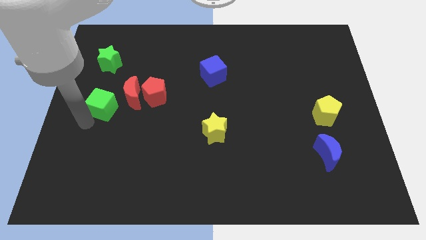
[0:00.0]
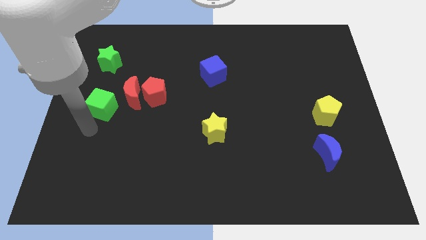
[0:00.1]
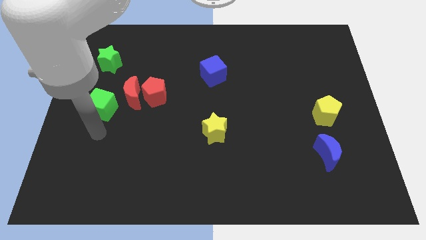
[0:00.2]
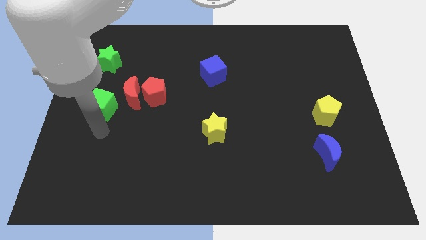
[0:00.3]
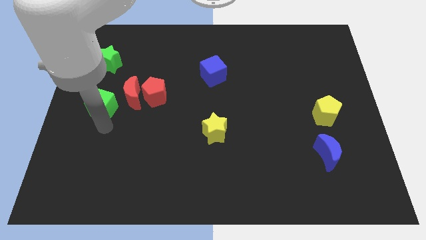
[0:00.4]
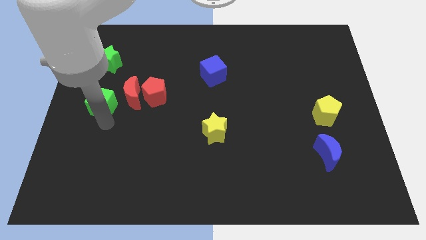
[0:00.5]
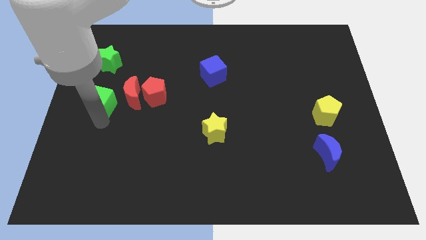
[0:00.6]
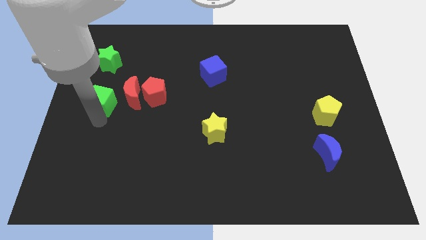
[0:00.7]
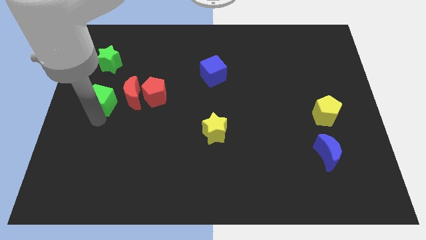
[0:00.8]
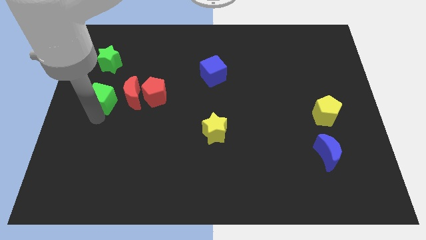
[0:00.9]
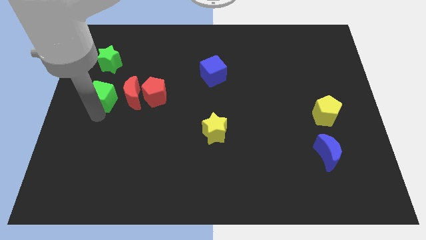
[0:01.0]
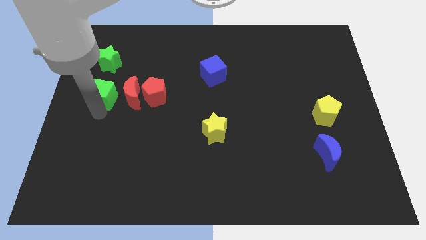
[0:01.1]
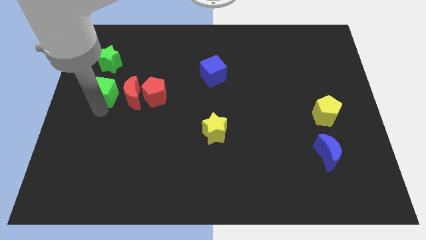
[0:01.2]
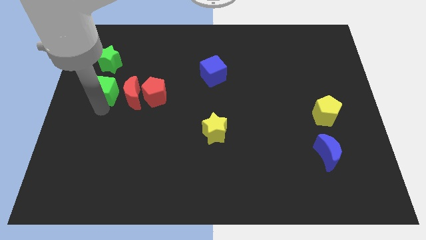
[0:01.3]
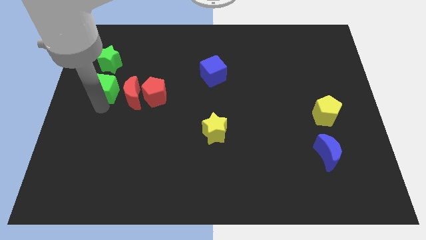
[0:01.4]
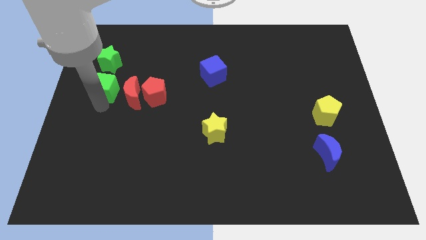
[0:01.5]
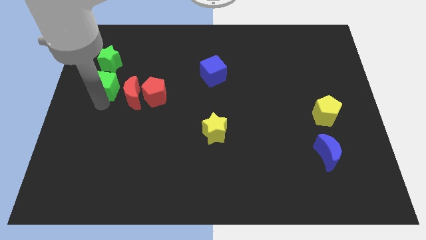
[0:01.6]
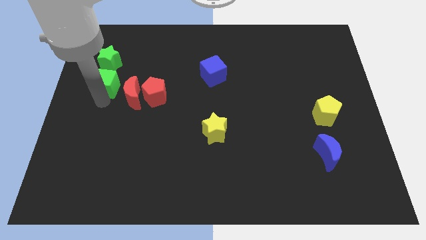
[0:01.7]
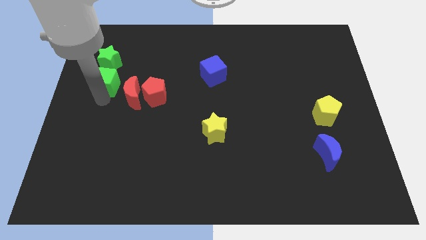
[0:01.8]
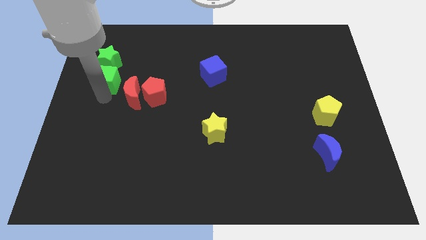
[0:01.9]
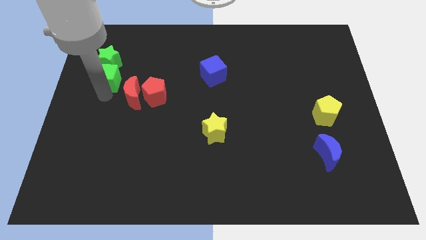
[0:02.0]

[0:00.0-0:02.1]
push the green cube close to the green star

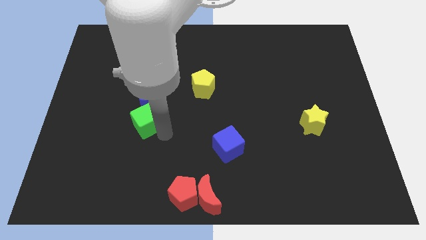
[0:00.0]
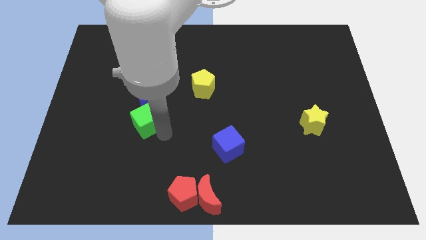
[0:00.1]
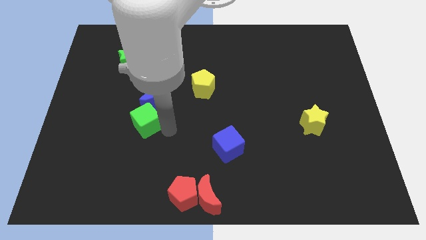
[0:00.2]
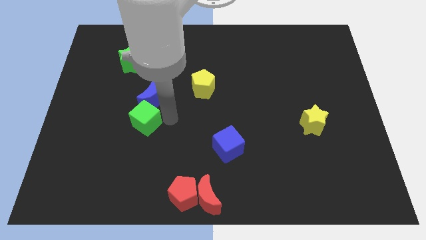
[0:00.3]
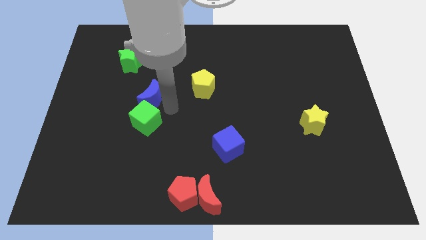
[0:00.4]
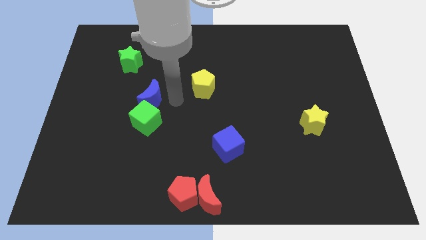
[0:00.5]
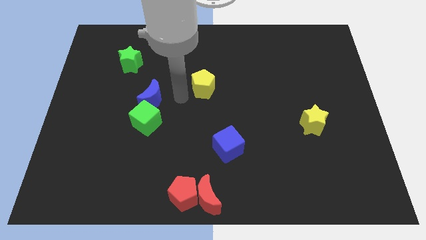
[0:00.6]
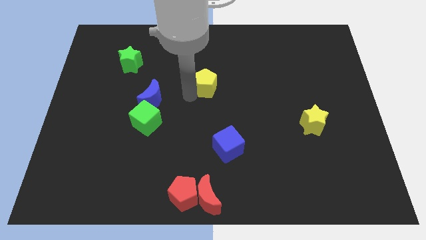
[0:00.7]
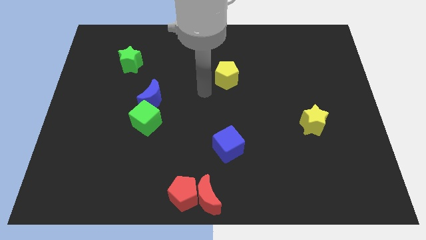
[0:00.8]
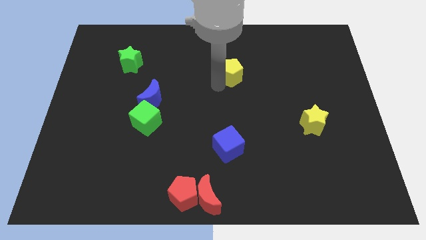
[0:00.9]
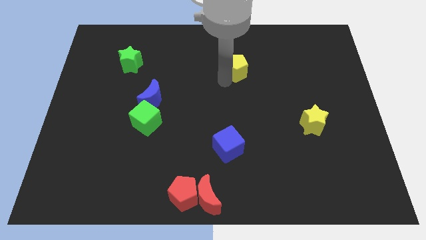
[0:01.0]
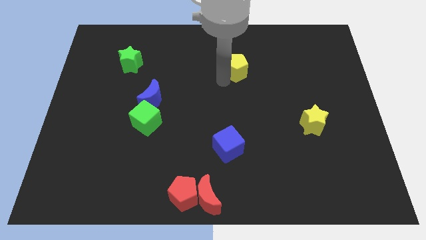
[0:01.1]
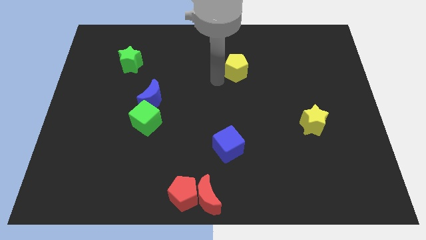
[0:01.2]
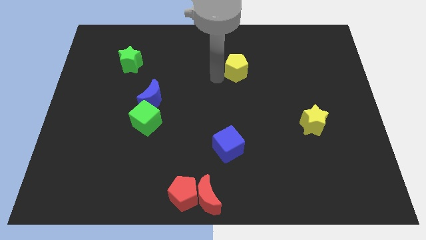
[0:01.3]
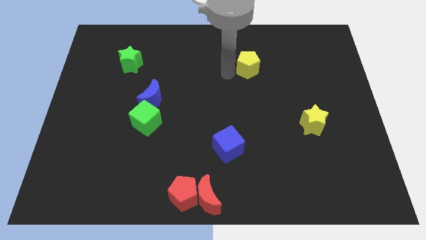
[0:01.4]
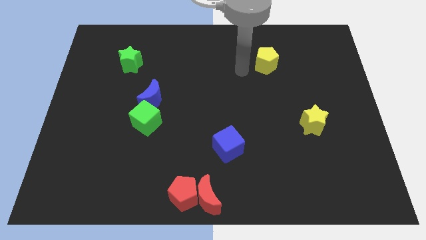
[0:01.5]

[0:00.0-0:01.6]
push the yellow pentagon towards the top right of the board

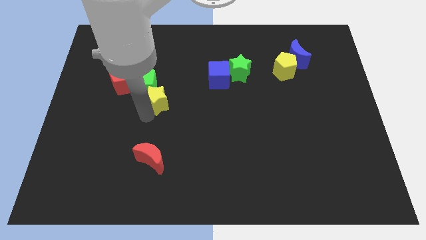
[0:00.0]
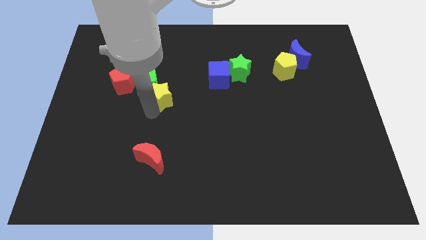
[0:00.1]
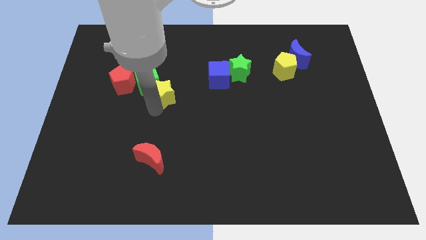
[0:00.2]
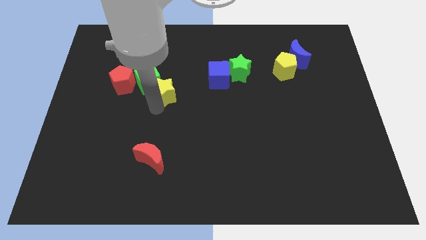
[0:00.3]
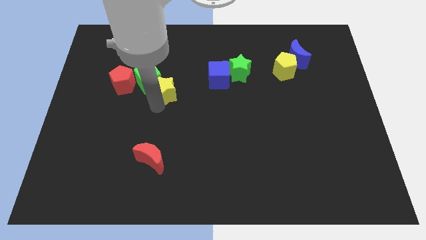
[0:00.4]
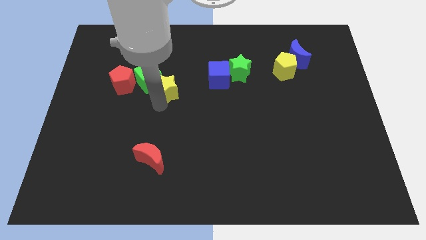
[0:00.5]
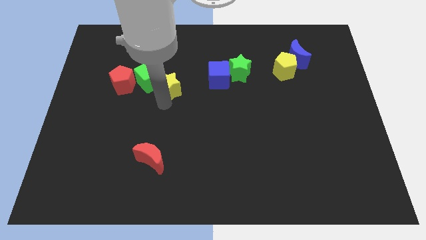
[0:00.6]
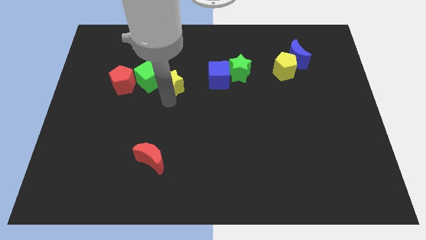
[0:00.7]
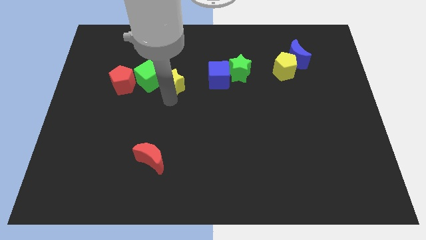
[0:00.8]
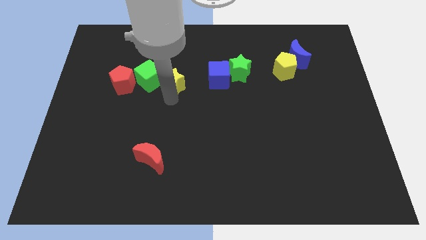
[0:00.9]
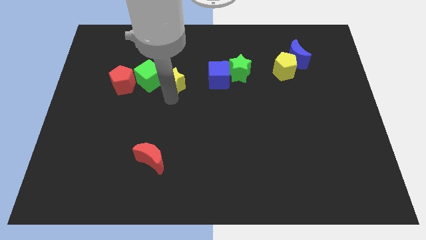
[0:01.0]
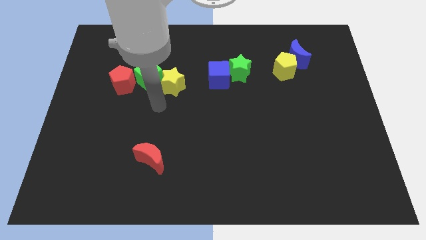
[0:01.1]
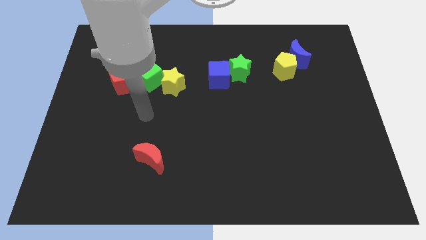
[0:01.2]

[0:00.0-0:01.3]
place the yellow star to the right of the green cube

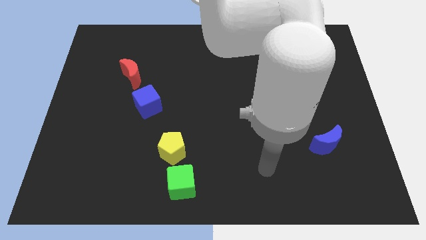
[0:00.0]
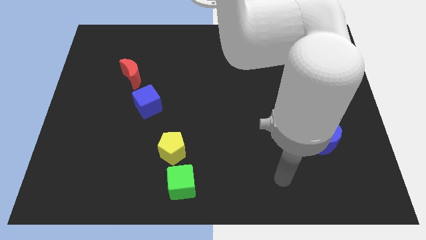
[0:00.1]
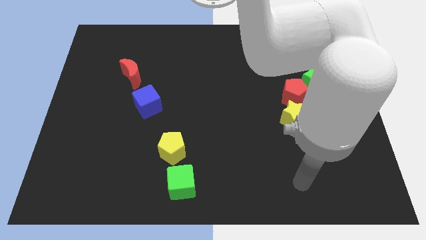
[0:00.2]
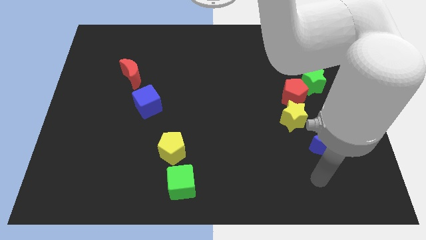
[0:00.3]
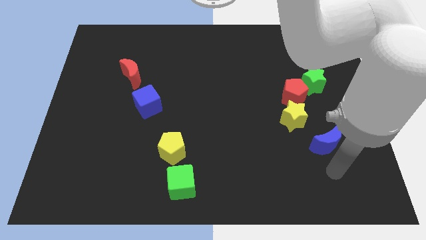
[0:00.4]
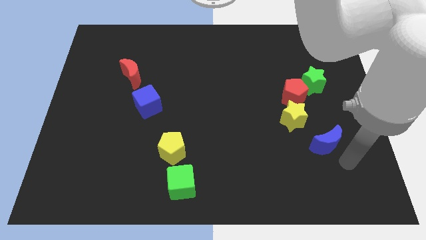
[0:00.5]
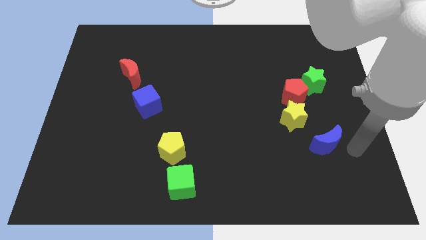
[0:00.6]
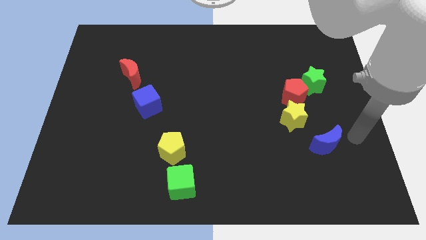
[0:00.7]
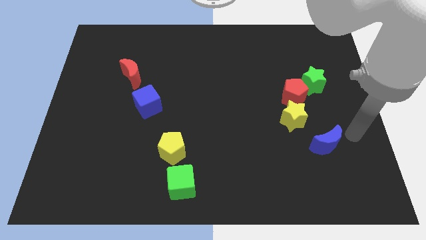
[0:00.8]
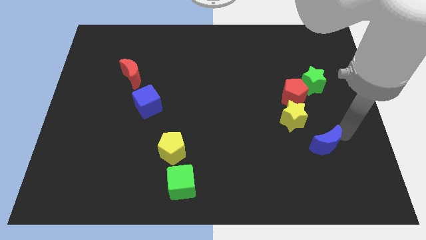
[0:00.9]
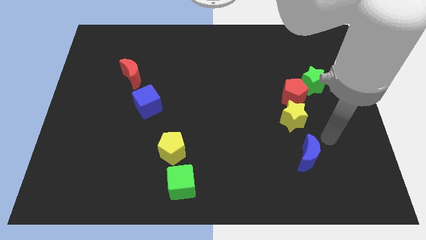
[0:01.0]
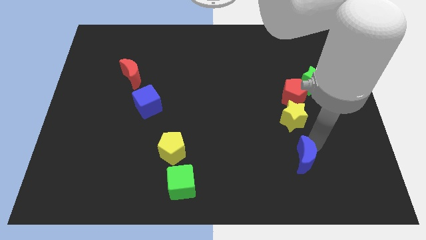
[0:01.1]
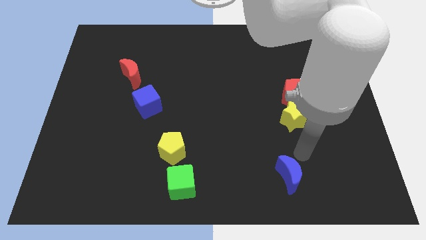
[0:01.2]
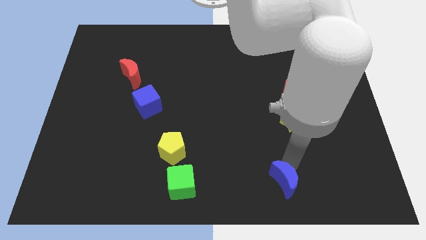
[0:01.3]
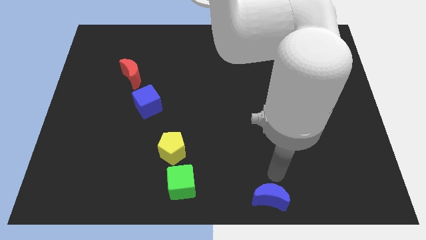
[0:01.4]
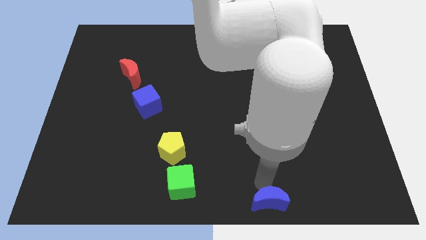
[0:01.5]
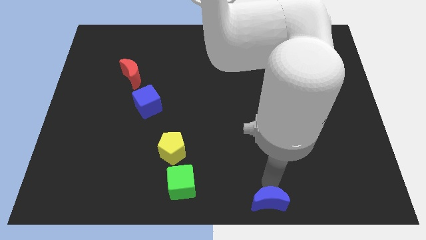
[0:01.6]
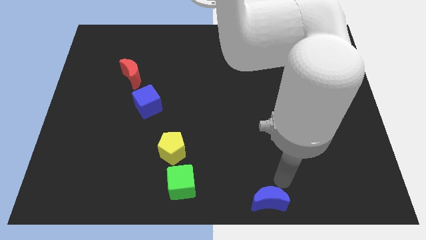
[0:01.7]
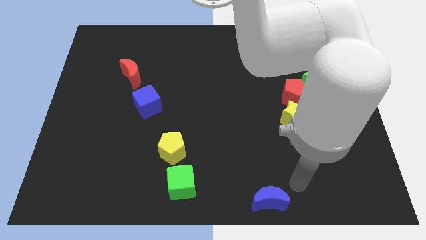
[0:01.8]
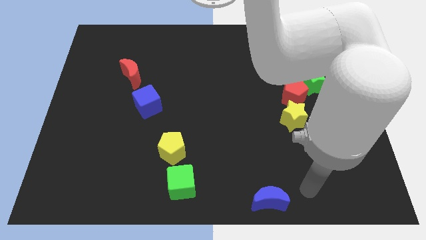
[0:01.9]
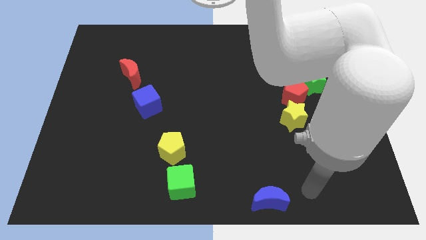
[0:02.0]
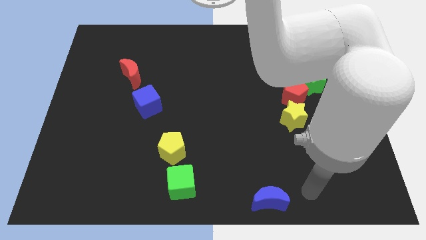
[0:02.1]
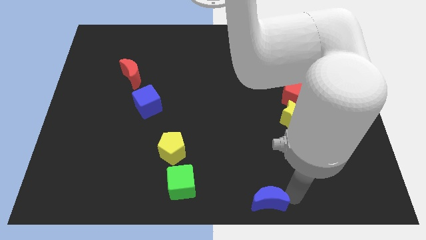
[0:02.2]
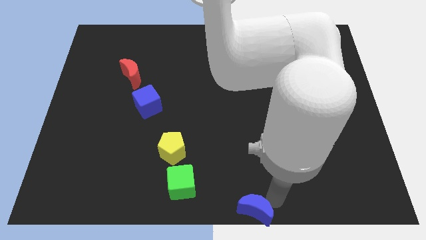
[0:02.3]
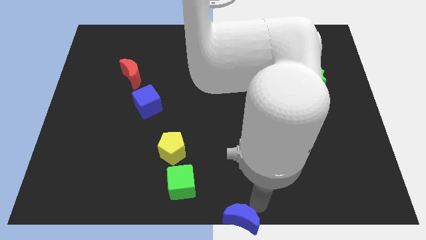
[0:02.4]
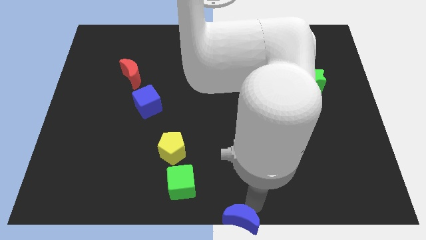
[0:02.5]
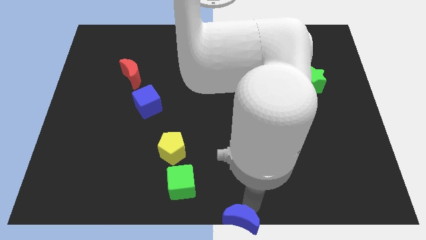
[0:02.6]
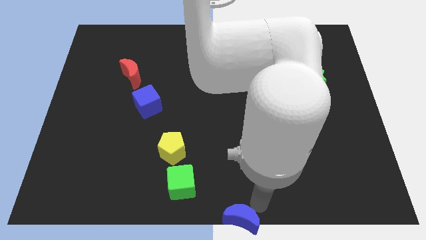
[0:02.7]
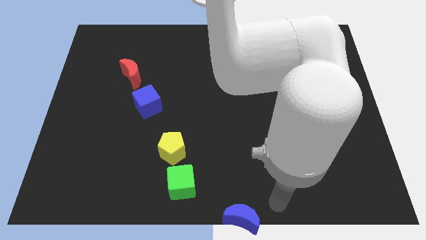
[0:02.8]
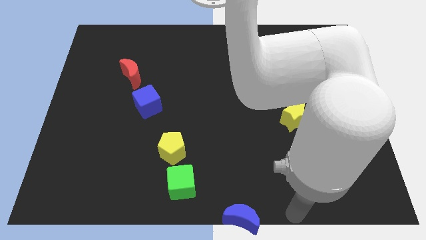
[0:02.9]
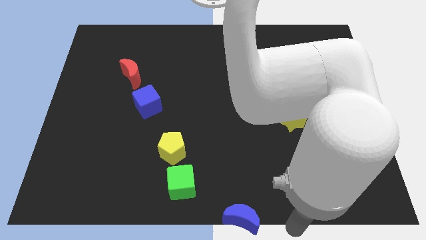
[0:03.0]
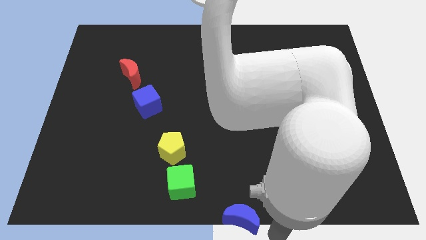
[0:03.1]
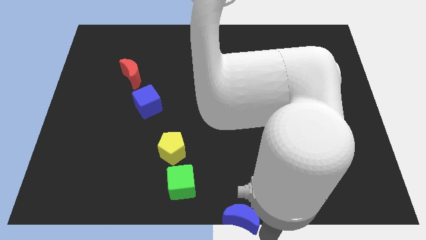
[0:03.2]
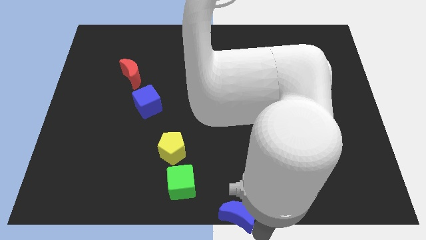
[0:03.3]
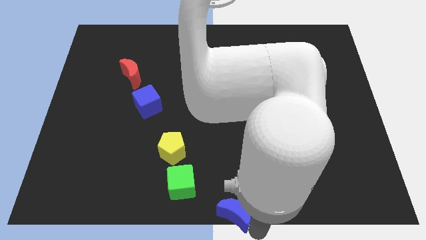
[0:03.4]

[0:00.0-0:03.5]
place the blue moon diagonally bottom right to the green cube

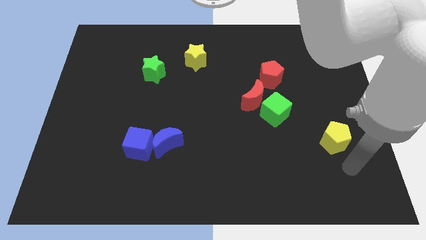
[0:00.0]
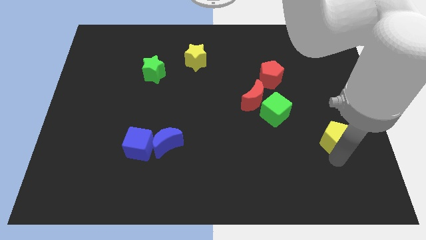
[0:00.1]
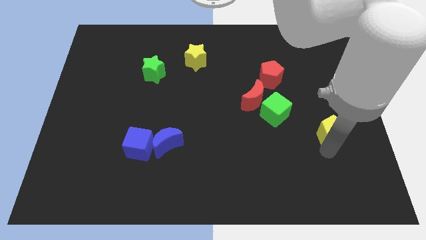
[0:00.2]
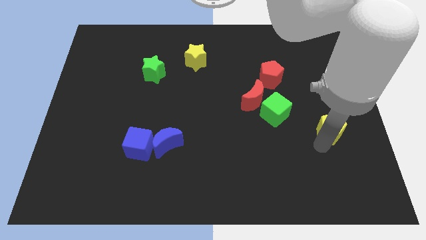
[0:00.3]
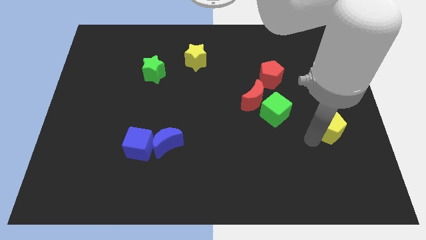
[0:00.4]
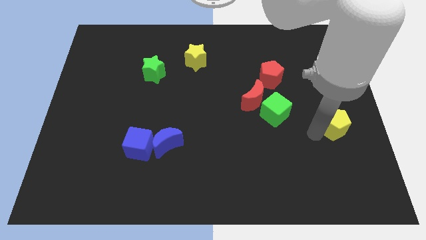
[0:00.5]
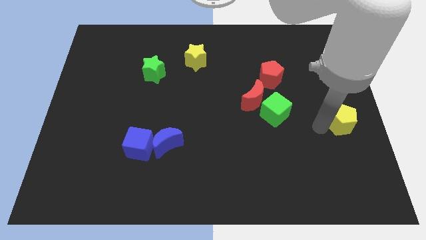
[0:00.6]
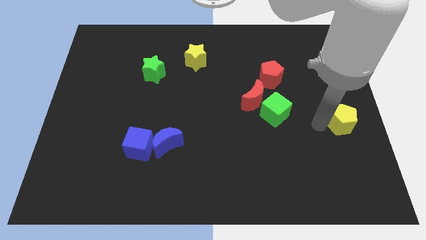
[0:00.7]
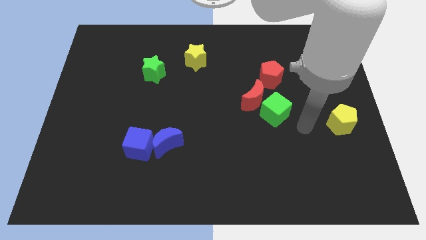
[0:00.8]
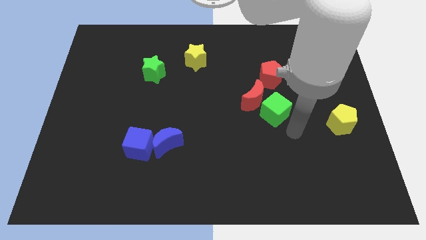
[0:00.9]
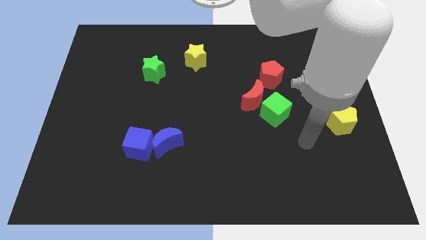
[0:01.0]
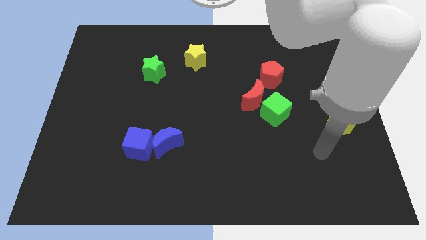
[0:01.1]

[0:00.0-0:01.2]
push the yellow pentagon to the top of the board
